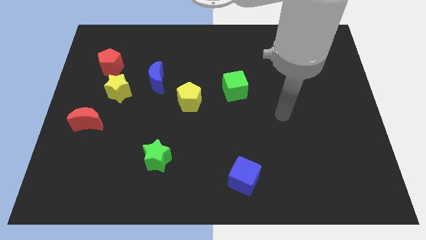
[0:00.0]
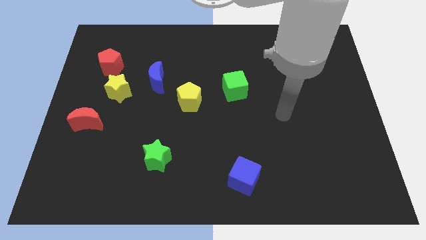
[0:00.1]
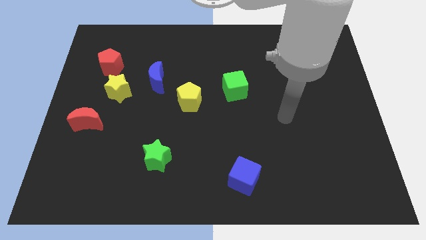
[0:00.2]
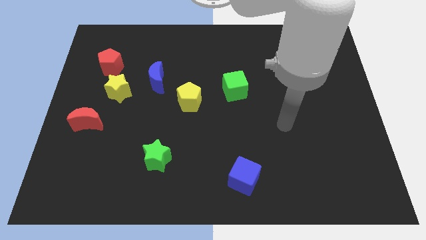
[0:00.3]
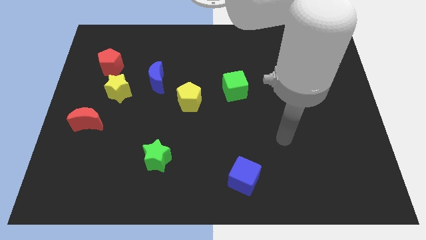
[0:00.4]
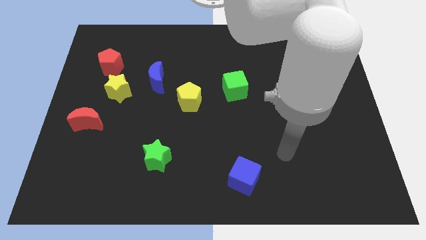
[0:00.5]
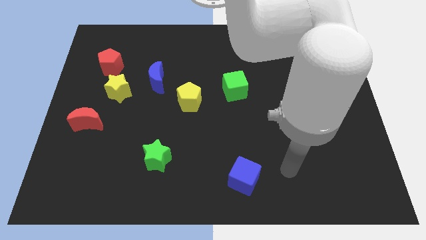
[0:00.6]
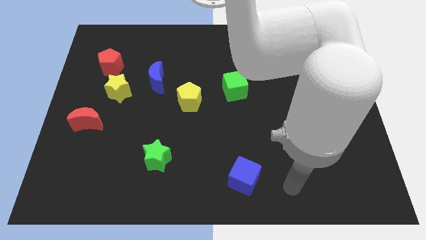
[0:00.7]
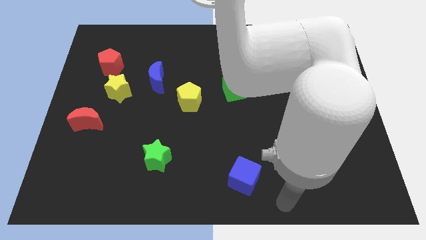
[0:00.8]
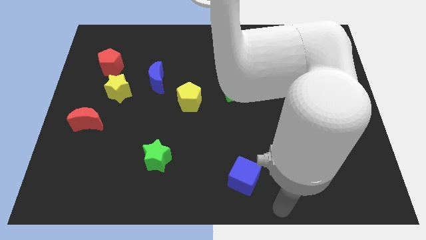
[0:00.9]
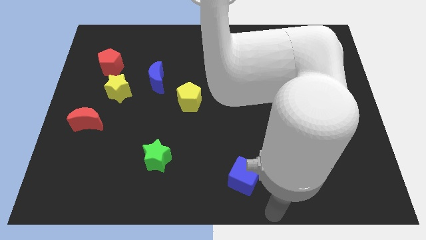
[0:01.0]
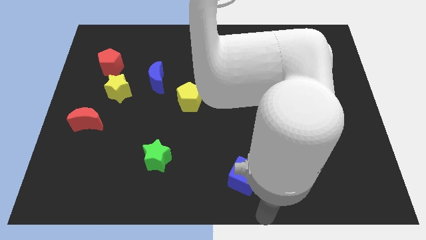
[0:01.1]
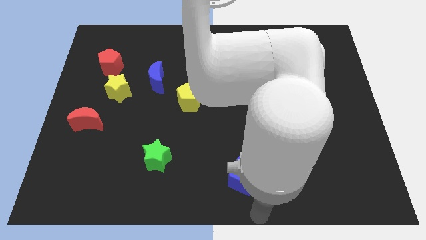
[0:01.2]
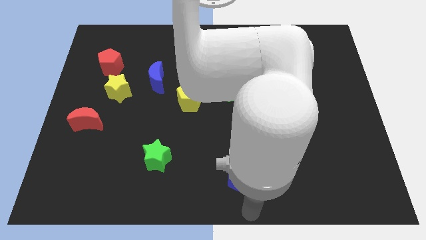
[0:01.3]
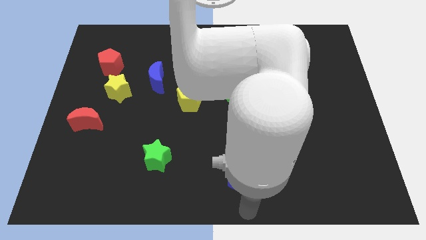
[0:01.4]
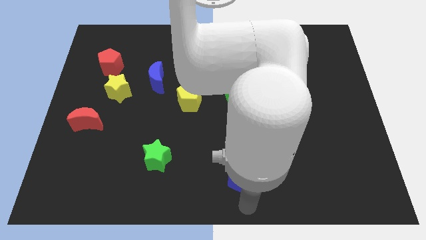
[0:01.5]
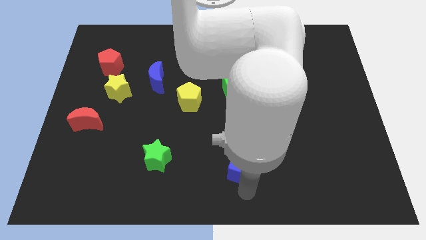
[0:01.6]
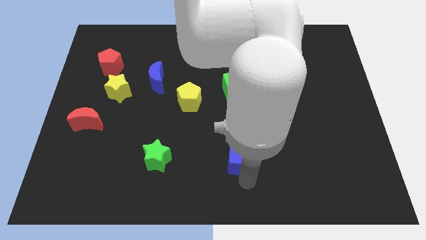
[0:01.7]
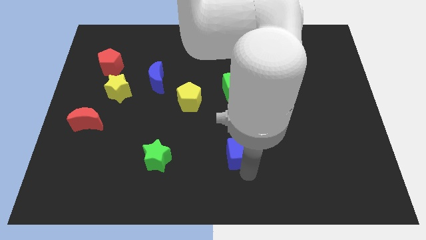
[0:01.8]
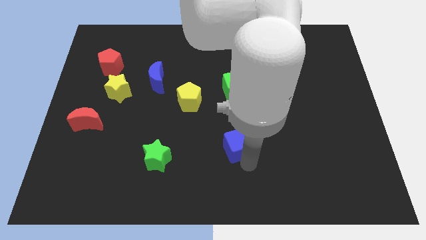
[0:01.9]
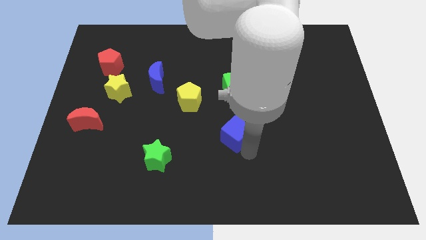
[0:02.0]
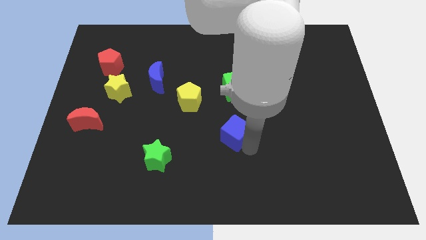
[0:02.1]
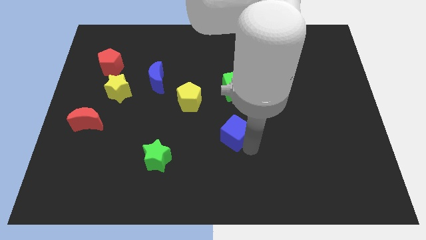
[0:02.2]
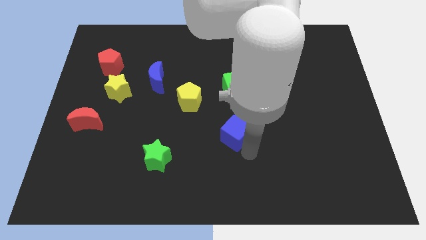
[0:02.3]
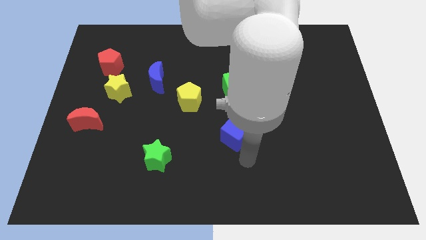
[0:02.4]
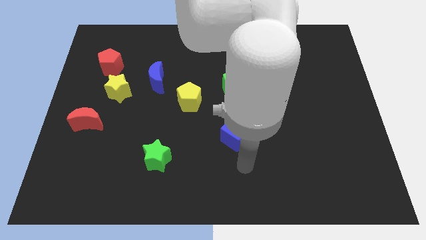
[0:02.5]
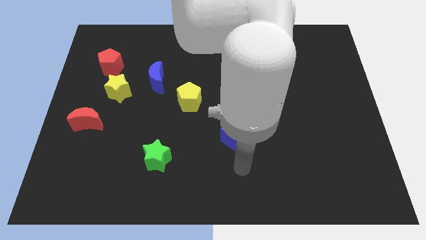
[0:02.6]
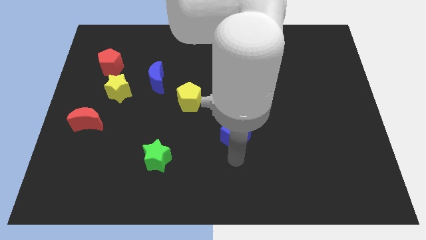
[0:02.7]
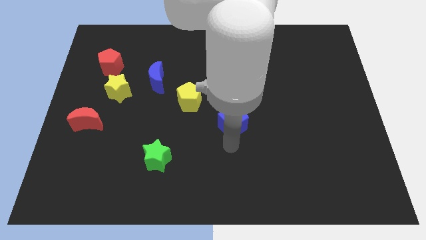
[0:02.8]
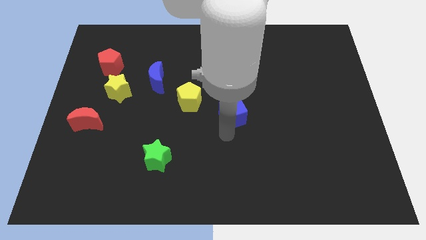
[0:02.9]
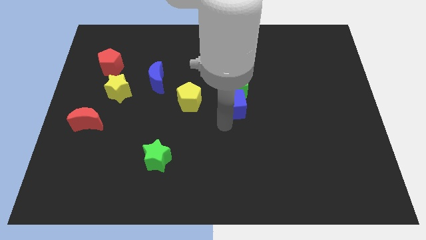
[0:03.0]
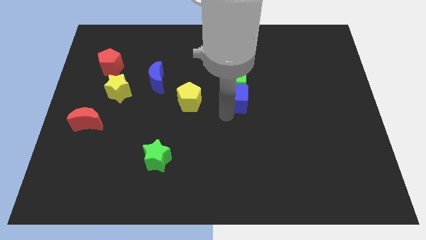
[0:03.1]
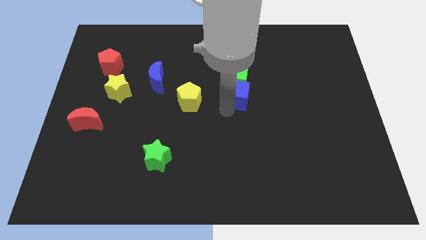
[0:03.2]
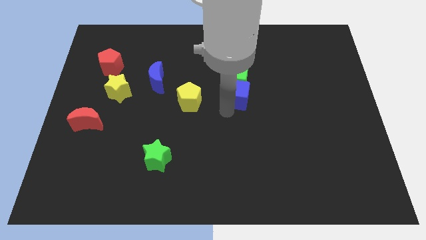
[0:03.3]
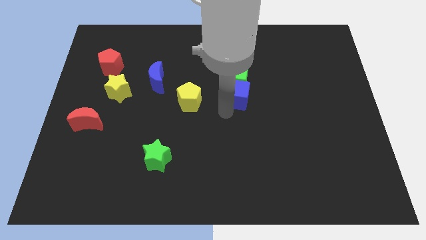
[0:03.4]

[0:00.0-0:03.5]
push the blue cube into the green cube

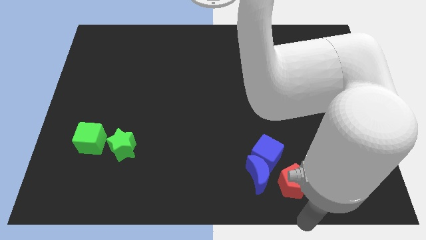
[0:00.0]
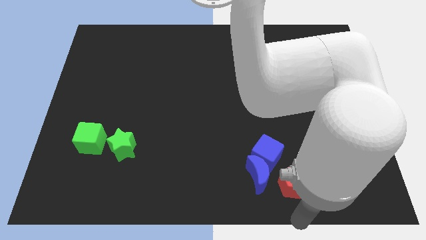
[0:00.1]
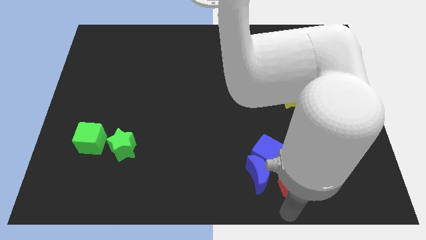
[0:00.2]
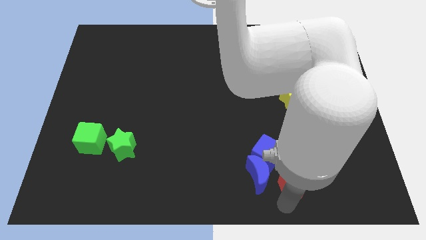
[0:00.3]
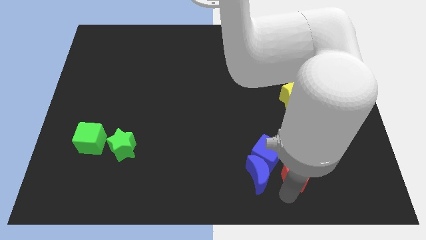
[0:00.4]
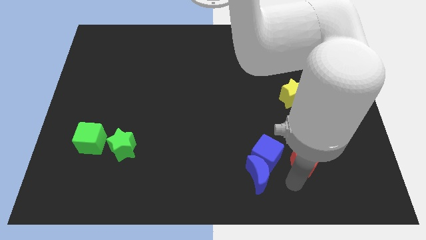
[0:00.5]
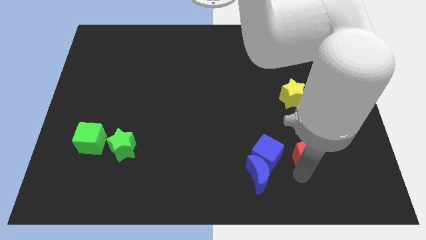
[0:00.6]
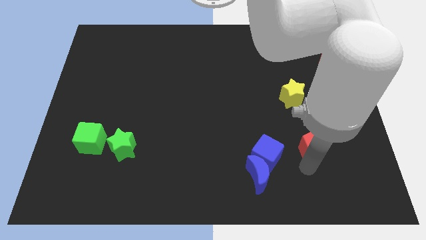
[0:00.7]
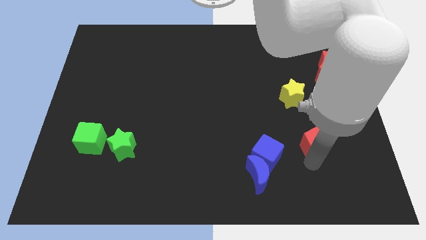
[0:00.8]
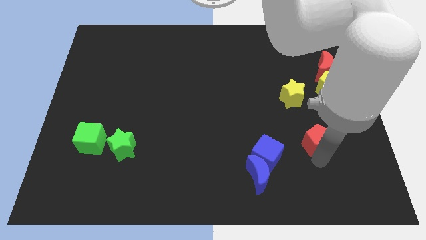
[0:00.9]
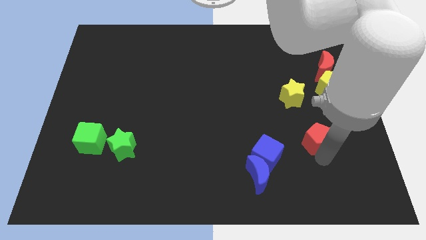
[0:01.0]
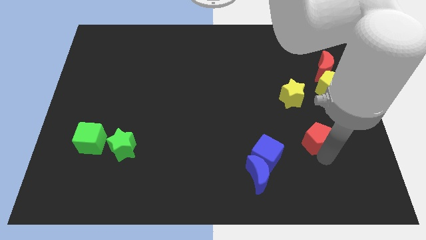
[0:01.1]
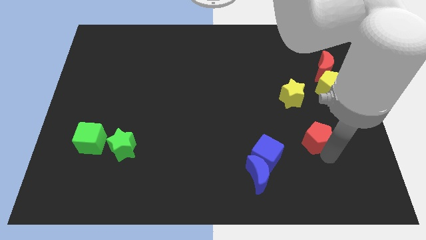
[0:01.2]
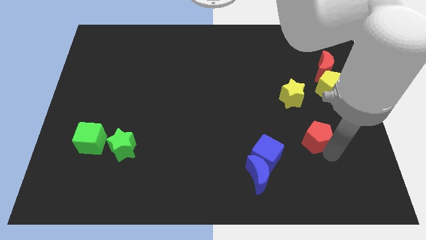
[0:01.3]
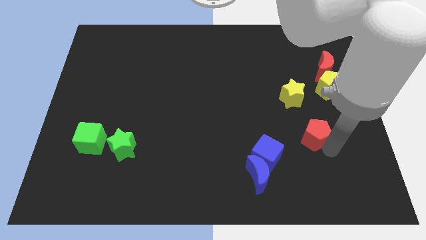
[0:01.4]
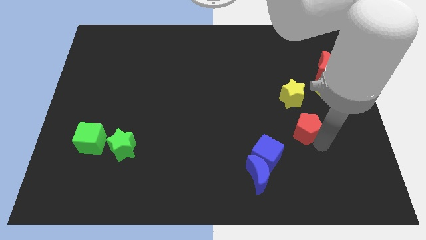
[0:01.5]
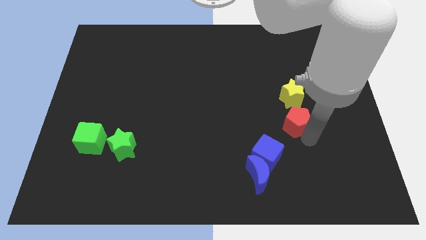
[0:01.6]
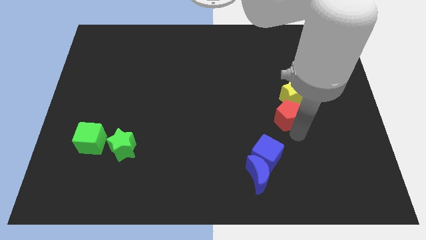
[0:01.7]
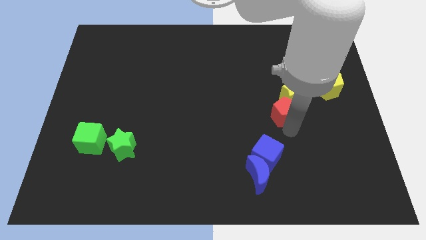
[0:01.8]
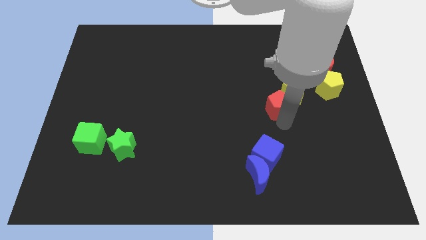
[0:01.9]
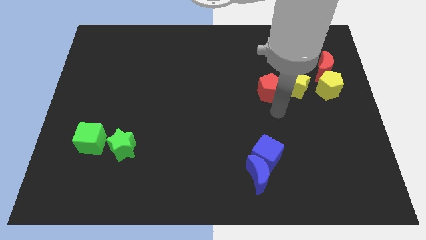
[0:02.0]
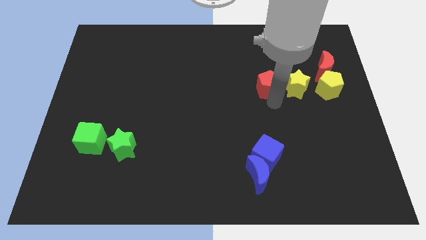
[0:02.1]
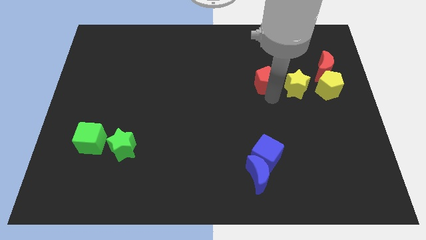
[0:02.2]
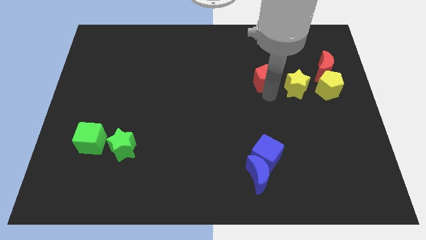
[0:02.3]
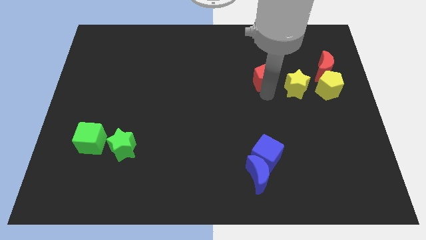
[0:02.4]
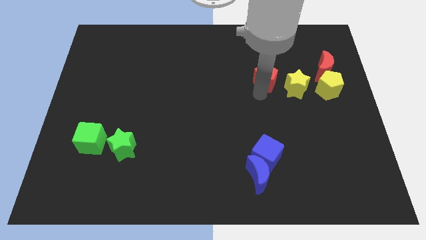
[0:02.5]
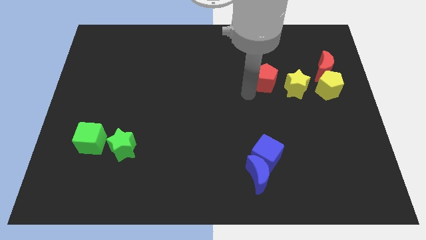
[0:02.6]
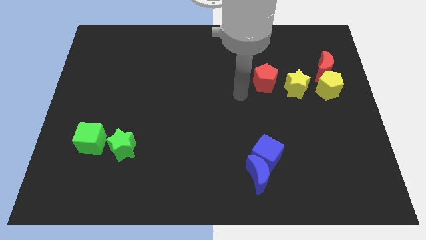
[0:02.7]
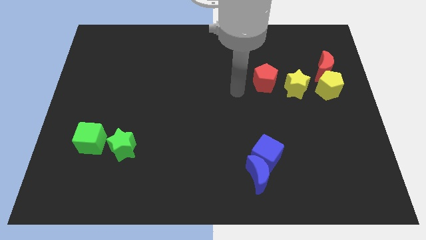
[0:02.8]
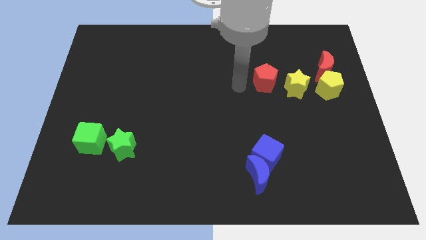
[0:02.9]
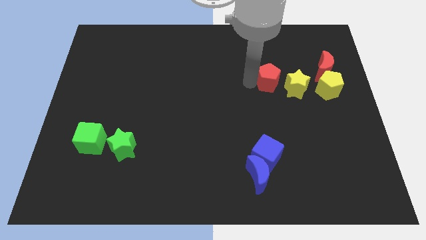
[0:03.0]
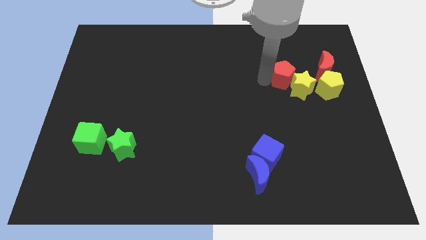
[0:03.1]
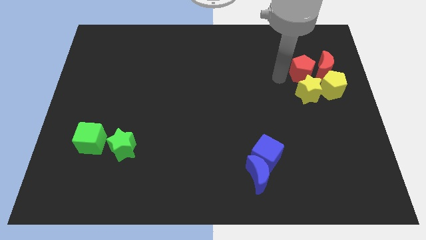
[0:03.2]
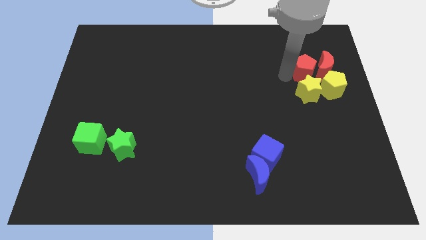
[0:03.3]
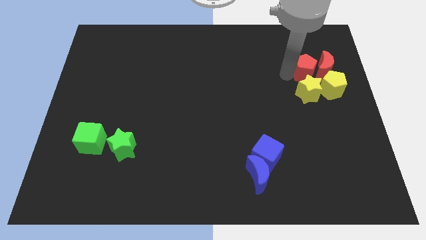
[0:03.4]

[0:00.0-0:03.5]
move red pentagon to the top of yellow star

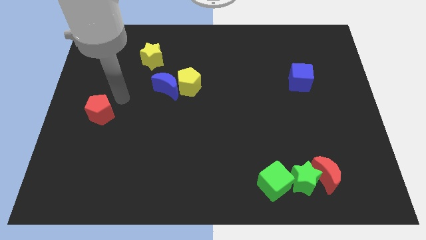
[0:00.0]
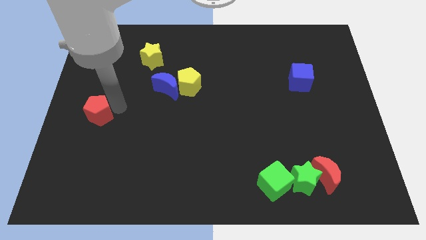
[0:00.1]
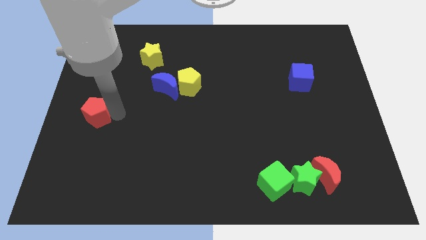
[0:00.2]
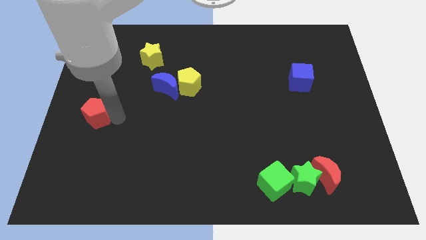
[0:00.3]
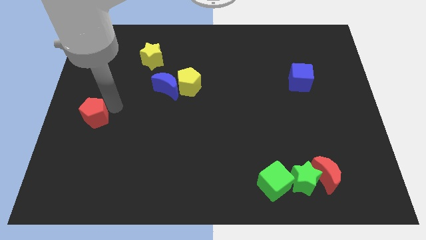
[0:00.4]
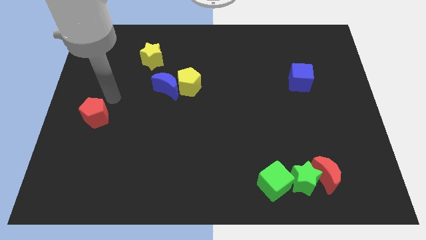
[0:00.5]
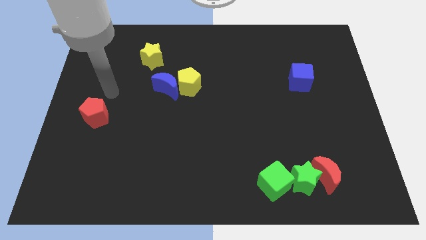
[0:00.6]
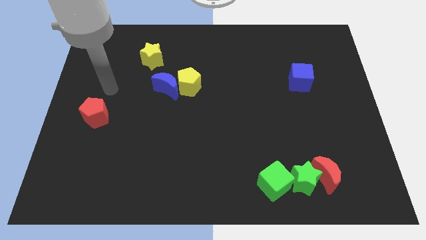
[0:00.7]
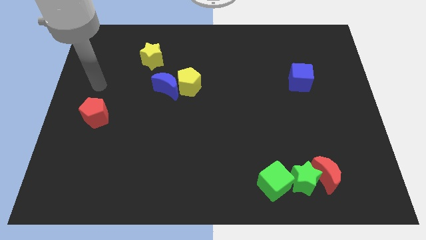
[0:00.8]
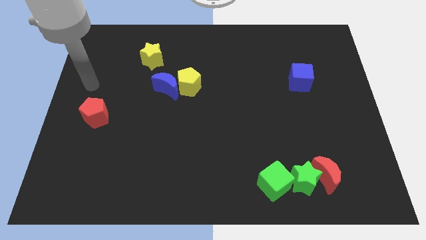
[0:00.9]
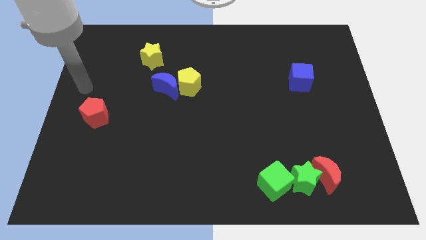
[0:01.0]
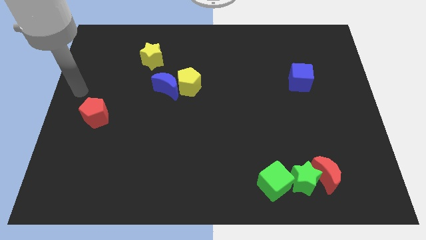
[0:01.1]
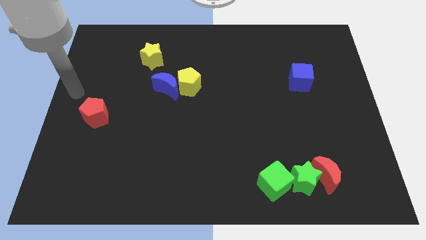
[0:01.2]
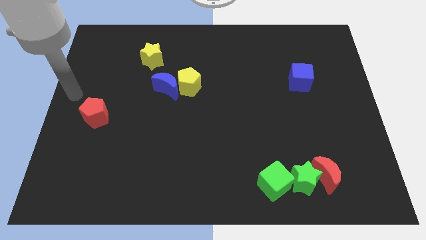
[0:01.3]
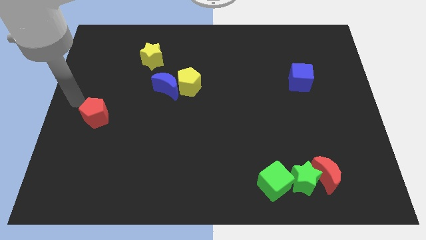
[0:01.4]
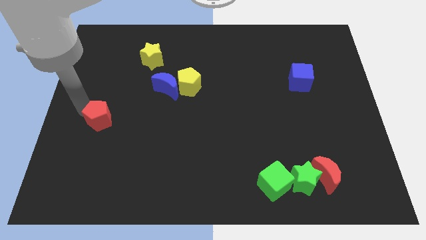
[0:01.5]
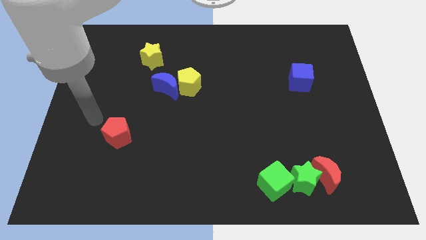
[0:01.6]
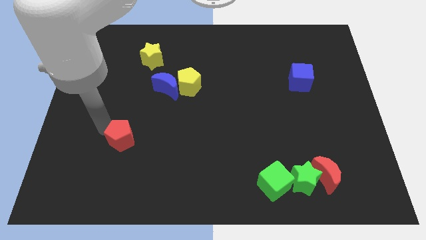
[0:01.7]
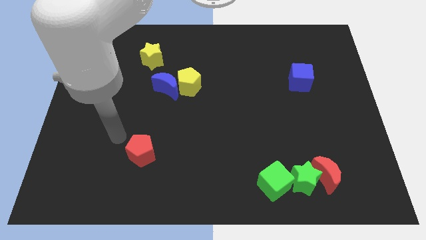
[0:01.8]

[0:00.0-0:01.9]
push the red pentagon to the bottom side

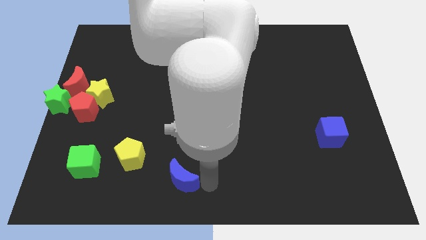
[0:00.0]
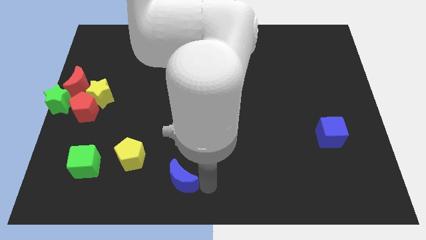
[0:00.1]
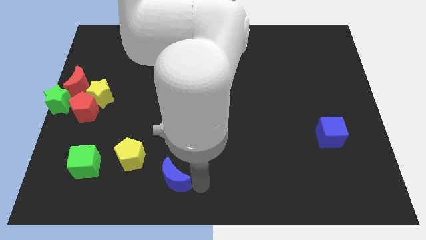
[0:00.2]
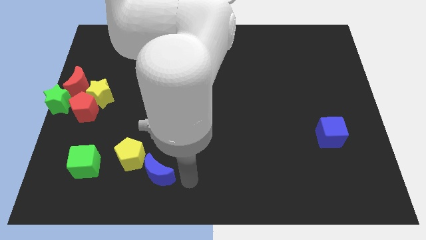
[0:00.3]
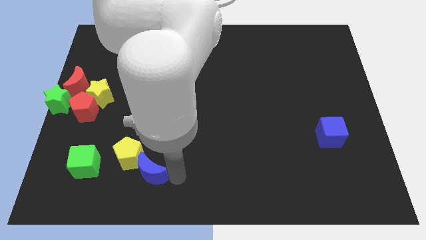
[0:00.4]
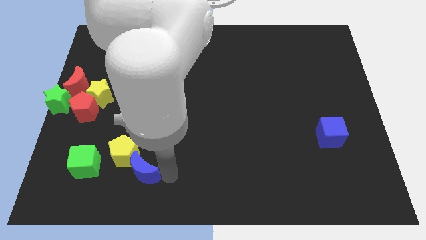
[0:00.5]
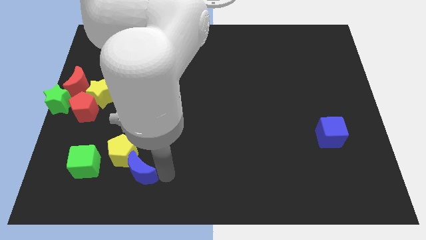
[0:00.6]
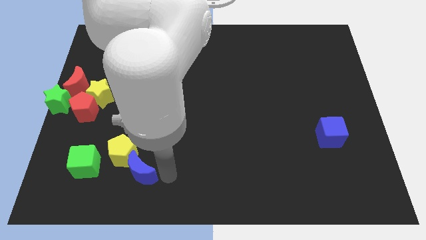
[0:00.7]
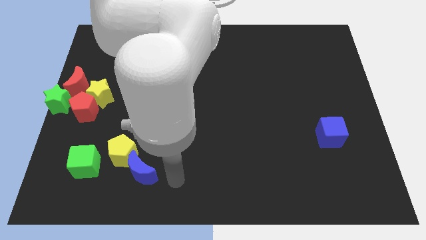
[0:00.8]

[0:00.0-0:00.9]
push the blue crescent into the yellow pentagon
